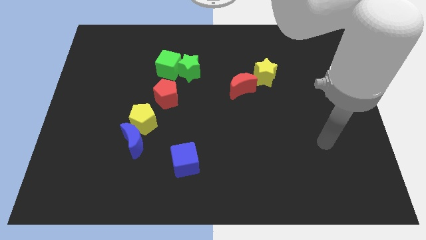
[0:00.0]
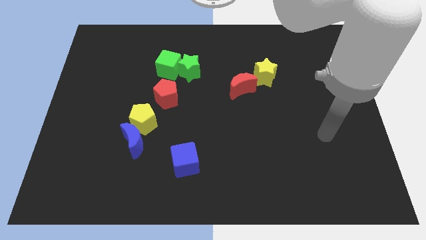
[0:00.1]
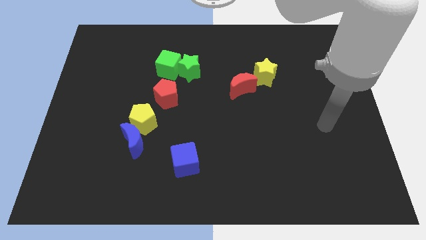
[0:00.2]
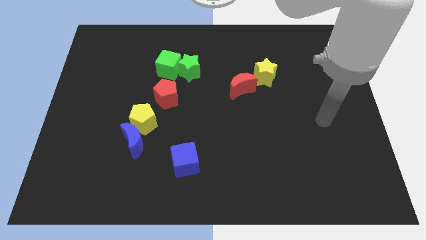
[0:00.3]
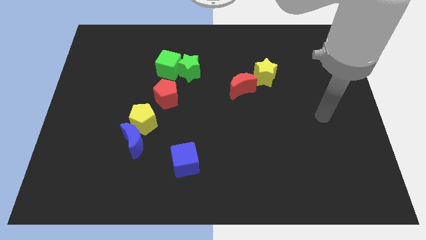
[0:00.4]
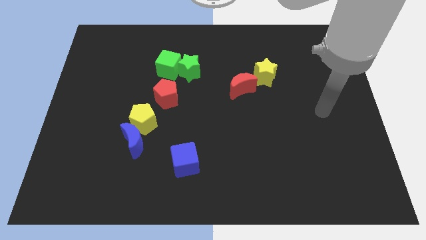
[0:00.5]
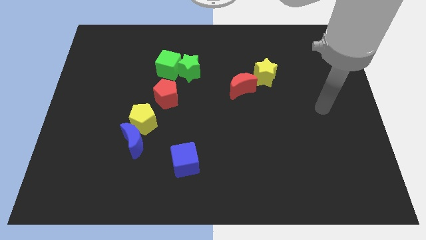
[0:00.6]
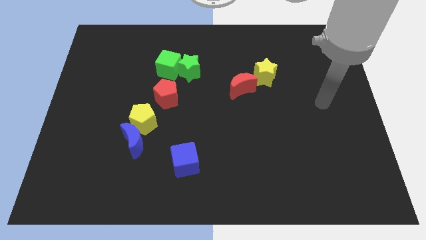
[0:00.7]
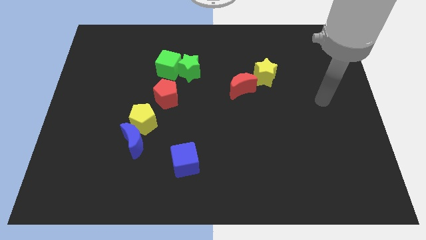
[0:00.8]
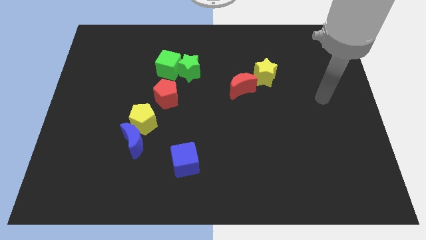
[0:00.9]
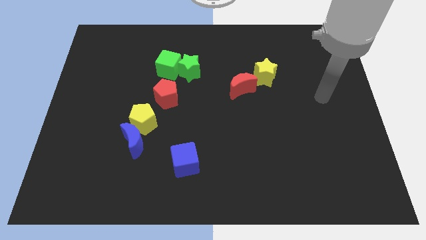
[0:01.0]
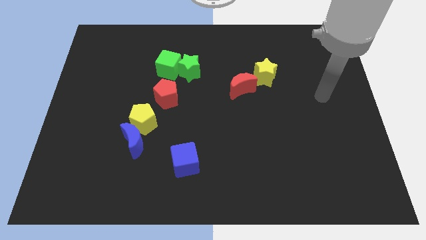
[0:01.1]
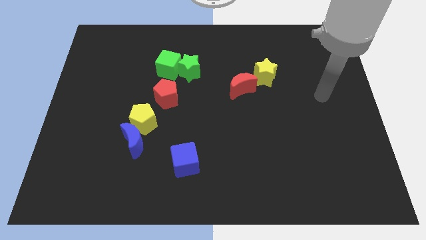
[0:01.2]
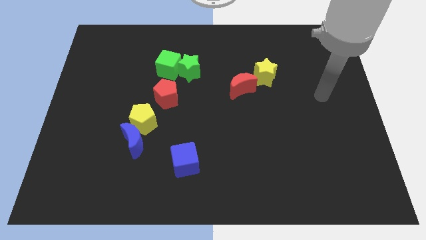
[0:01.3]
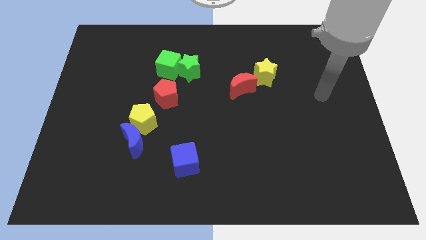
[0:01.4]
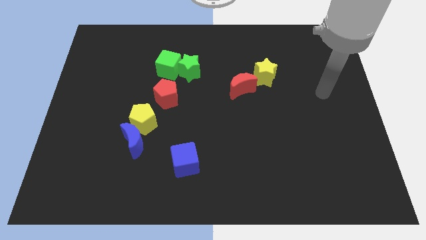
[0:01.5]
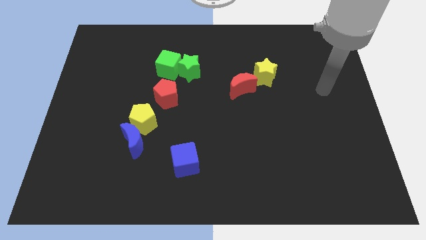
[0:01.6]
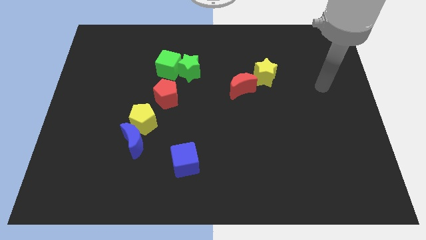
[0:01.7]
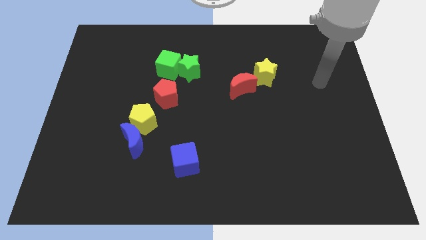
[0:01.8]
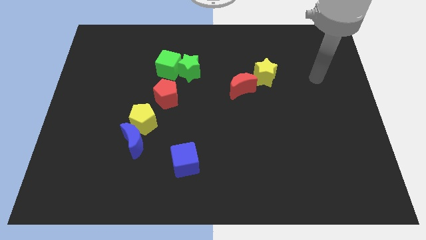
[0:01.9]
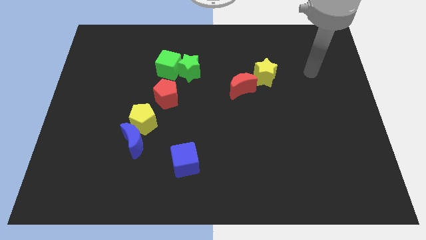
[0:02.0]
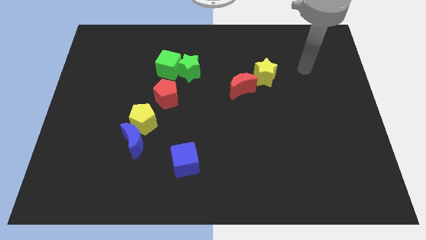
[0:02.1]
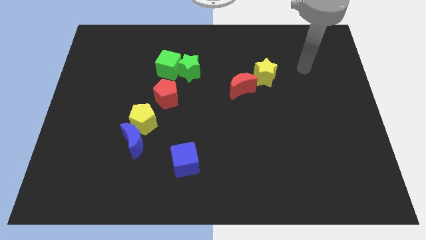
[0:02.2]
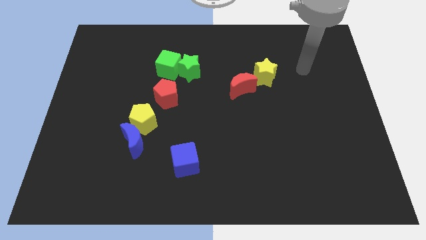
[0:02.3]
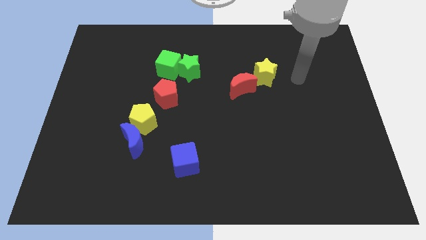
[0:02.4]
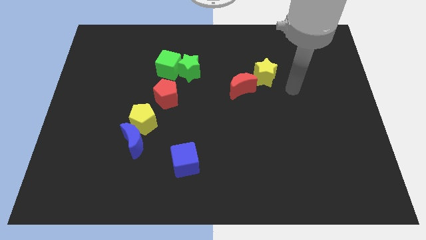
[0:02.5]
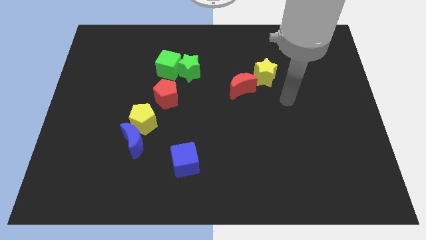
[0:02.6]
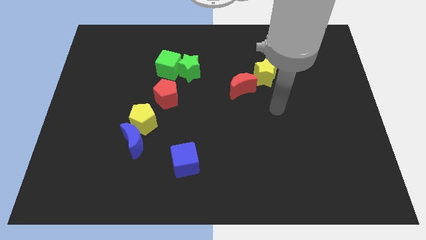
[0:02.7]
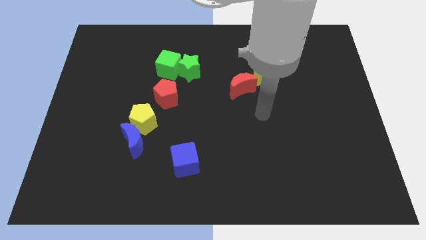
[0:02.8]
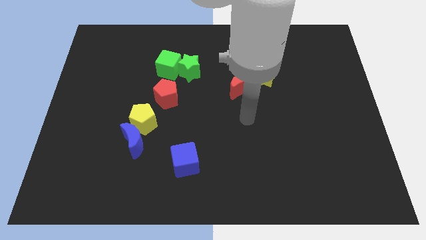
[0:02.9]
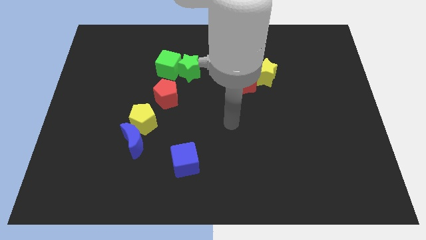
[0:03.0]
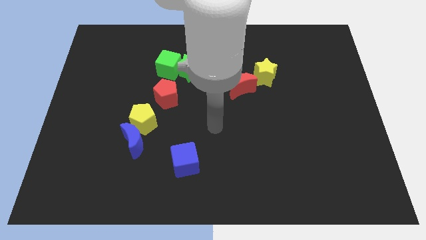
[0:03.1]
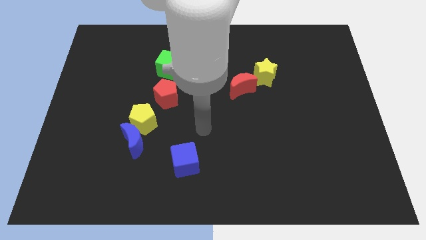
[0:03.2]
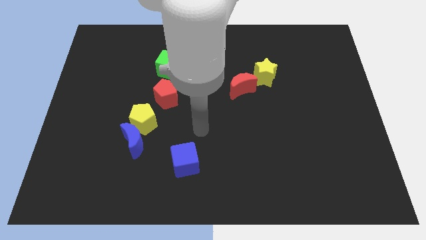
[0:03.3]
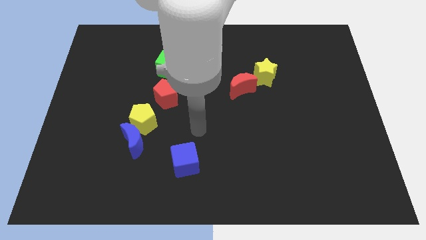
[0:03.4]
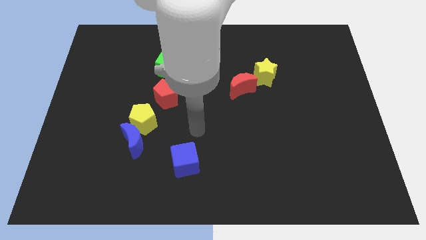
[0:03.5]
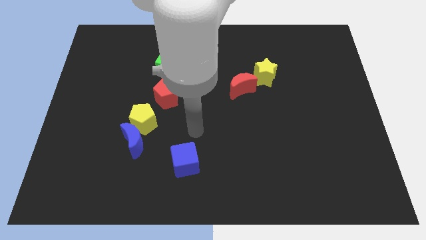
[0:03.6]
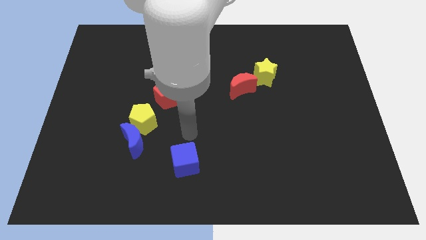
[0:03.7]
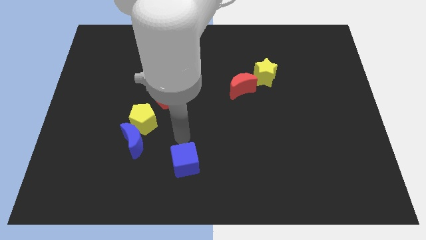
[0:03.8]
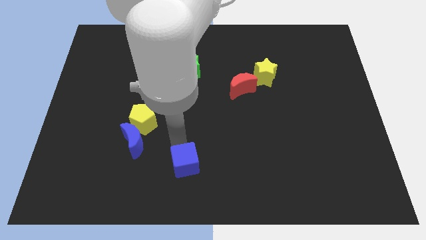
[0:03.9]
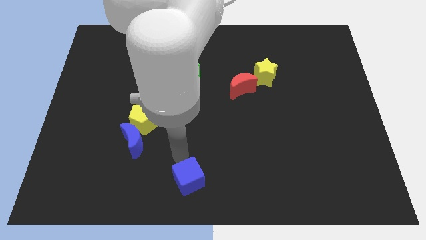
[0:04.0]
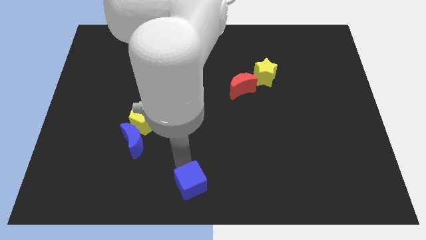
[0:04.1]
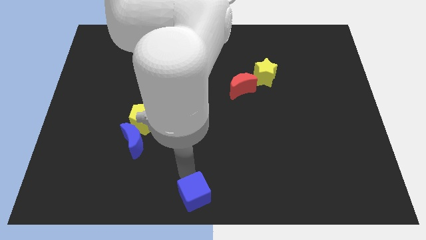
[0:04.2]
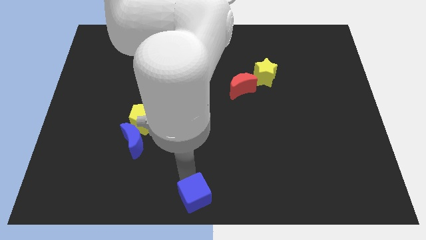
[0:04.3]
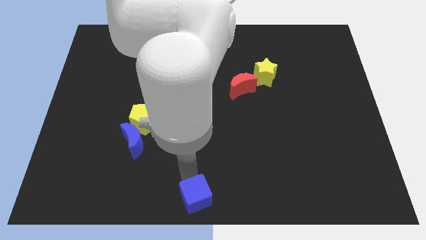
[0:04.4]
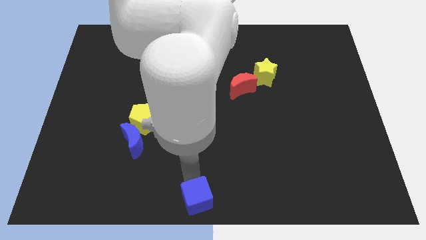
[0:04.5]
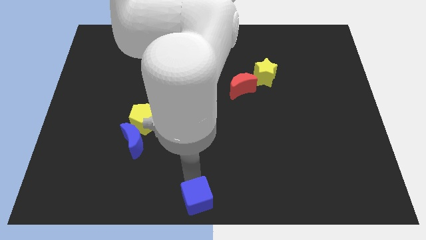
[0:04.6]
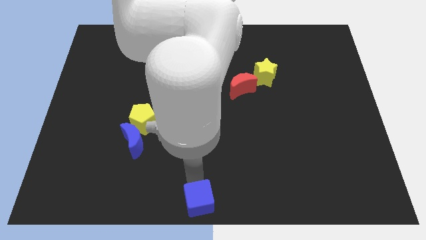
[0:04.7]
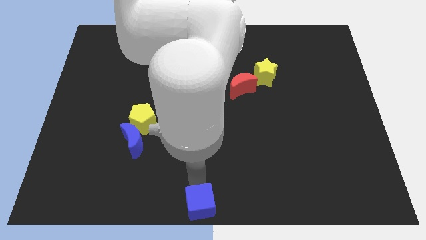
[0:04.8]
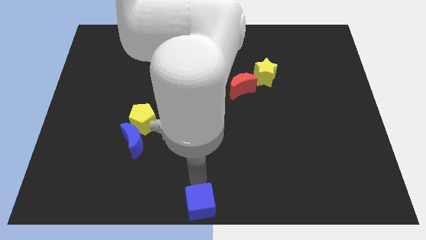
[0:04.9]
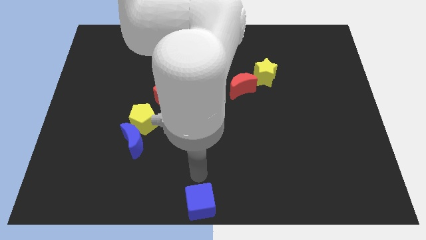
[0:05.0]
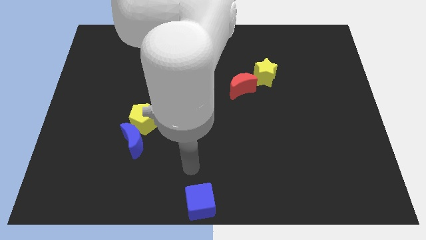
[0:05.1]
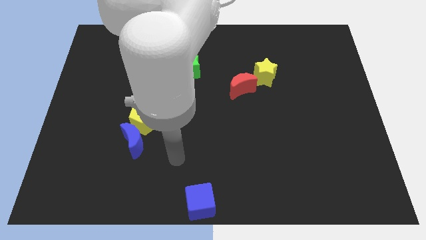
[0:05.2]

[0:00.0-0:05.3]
push the blue cube to the bottom center of the board

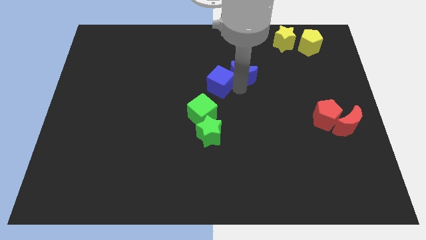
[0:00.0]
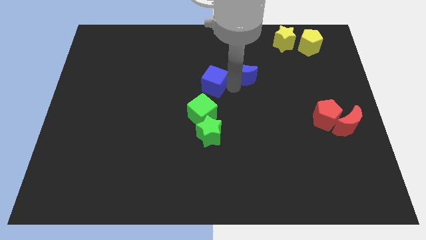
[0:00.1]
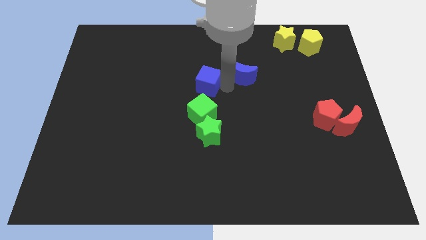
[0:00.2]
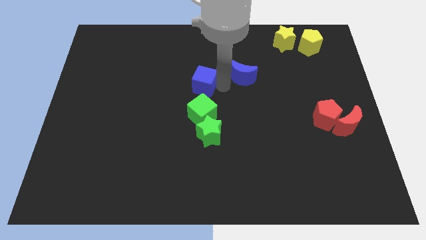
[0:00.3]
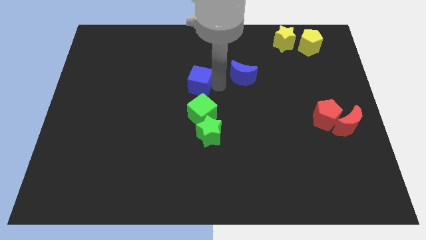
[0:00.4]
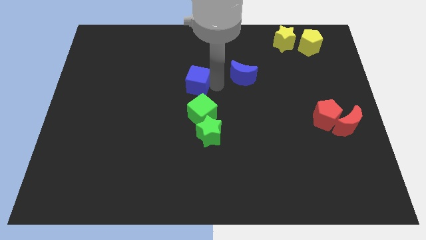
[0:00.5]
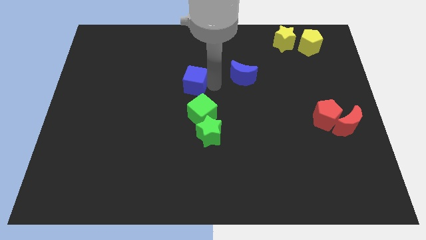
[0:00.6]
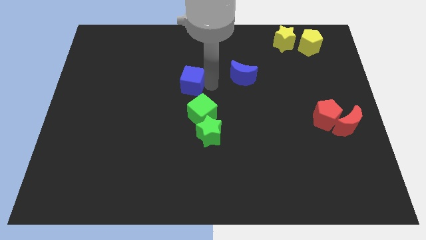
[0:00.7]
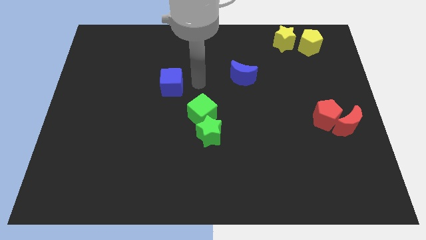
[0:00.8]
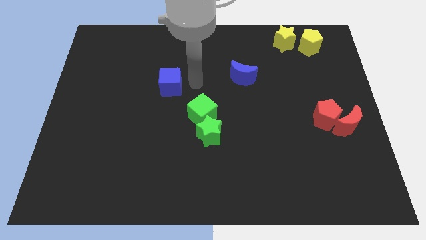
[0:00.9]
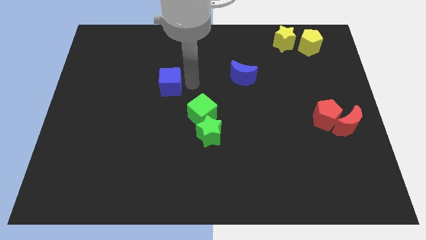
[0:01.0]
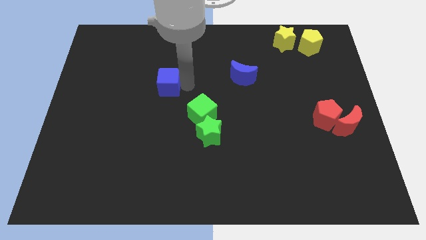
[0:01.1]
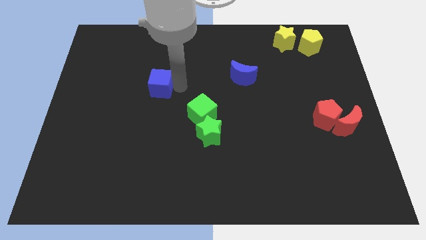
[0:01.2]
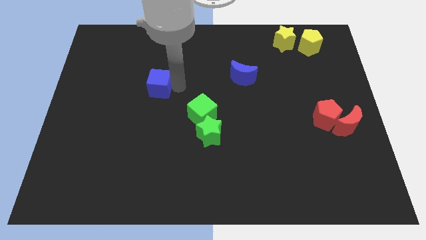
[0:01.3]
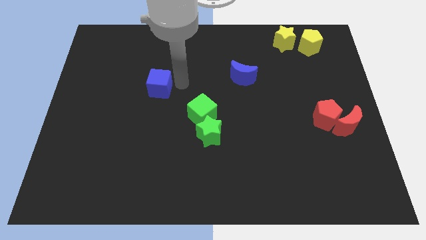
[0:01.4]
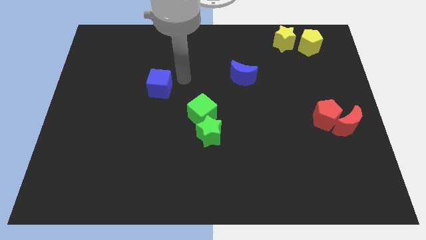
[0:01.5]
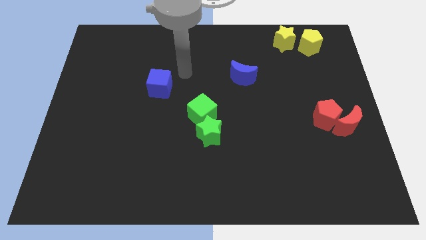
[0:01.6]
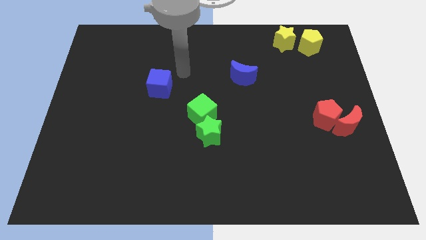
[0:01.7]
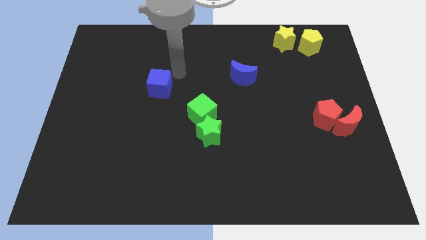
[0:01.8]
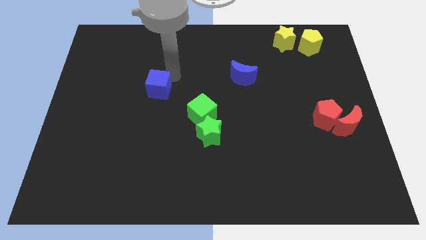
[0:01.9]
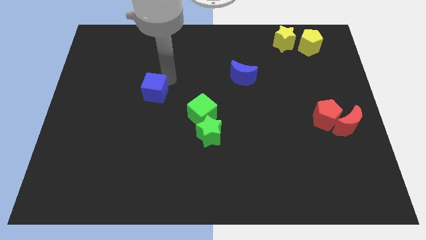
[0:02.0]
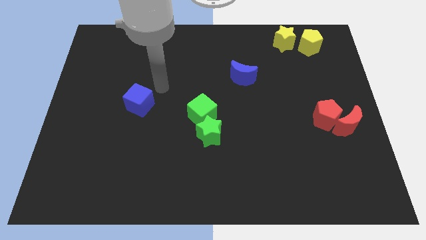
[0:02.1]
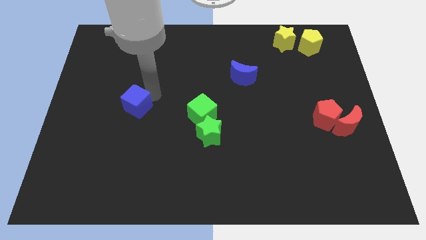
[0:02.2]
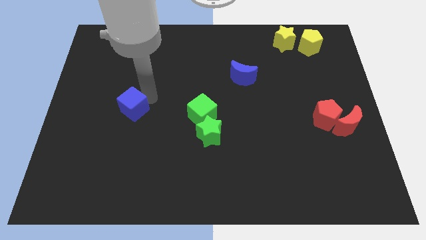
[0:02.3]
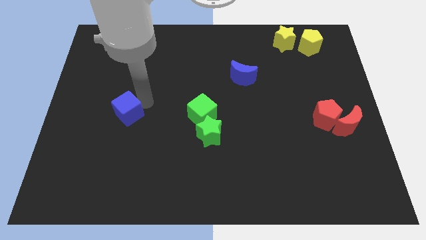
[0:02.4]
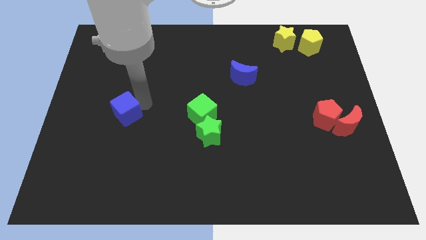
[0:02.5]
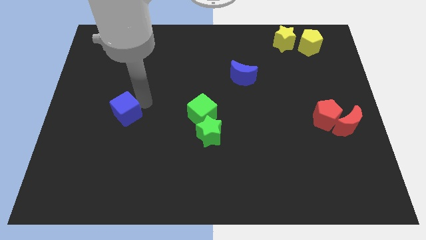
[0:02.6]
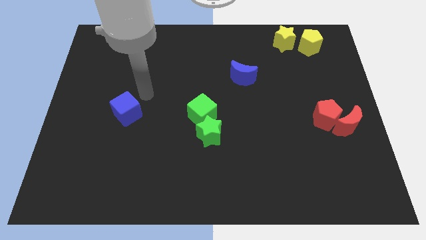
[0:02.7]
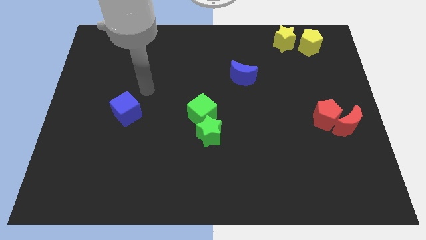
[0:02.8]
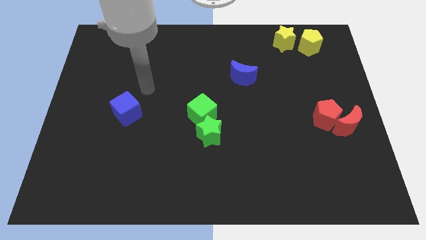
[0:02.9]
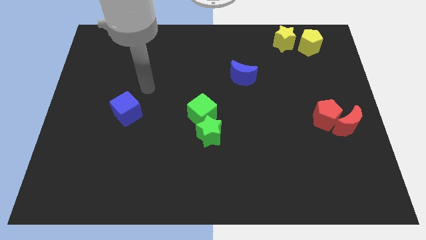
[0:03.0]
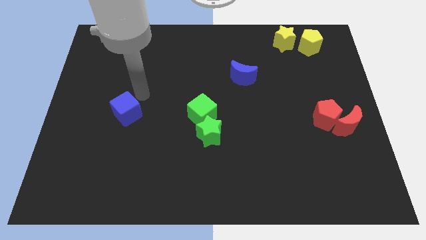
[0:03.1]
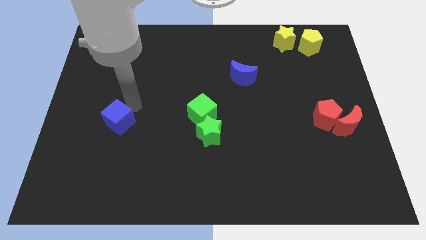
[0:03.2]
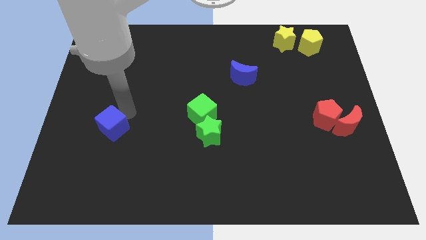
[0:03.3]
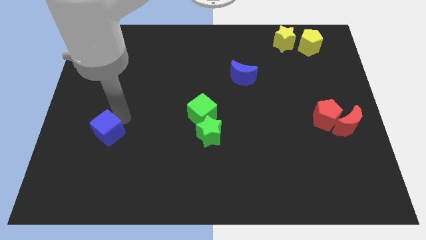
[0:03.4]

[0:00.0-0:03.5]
place blue cube parallel to green star
